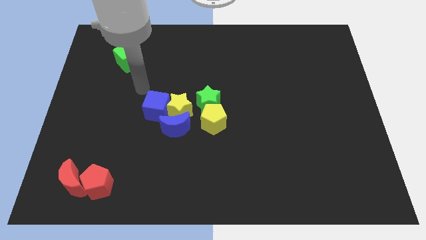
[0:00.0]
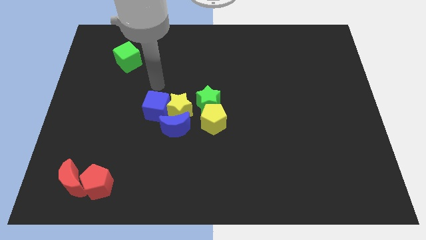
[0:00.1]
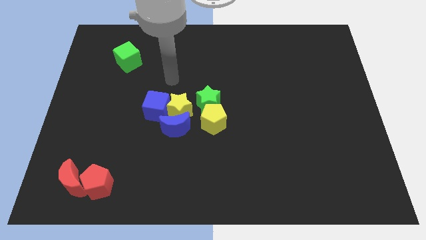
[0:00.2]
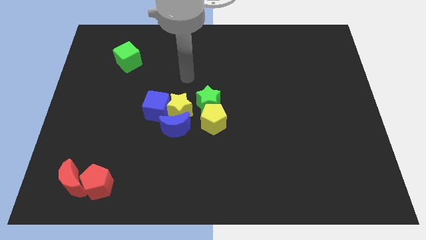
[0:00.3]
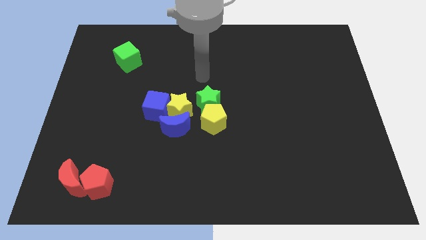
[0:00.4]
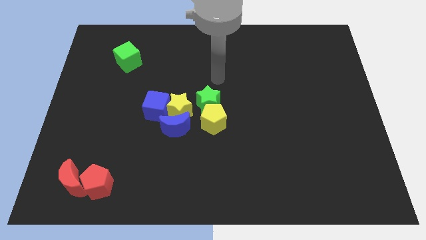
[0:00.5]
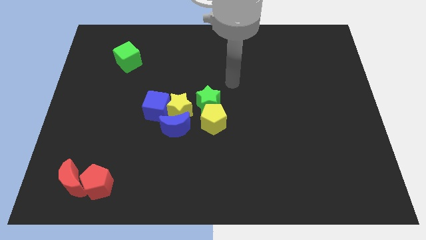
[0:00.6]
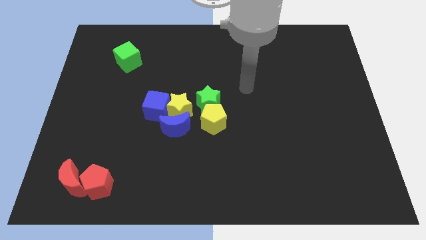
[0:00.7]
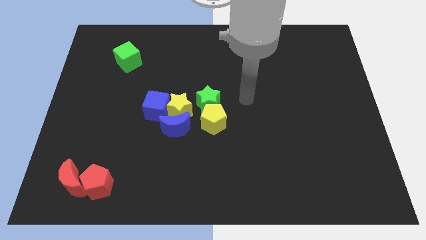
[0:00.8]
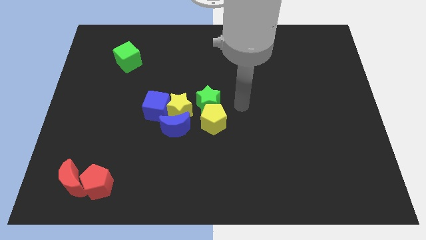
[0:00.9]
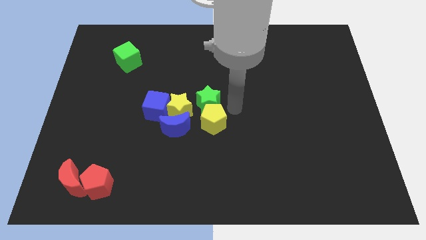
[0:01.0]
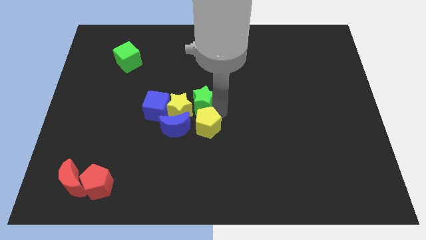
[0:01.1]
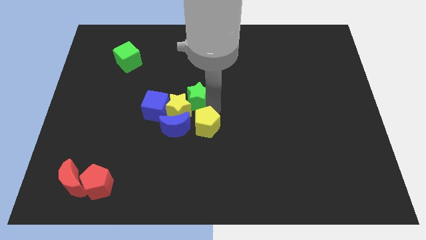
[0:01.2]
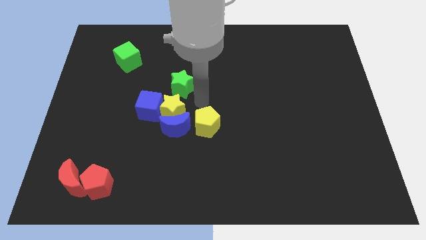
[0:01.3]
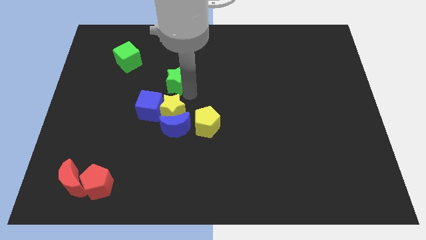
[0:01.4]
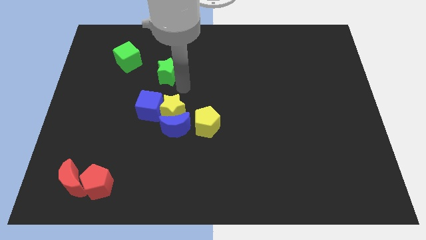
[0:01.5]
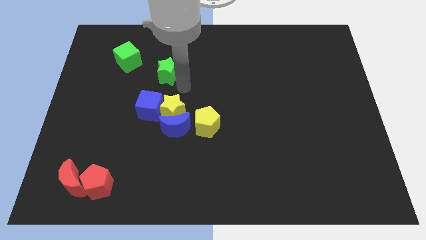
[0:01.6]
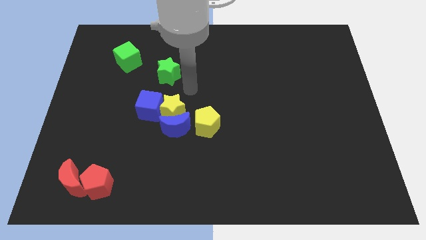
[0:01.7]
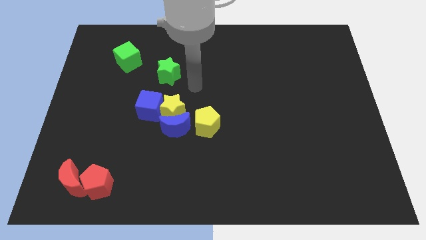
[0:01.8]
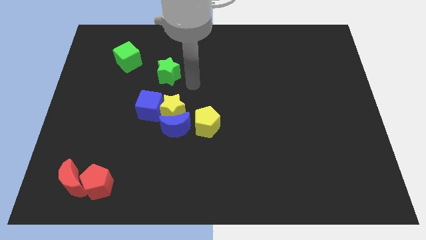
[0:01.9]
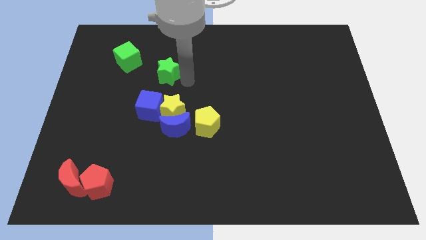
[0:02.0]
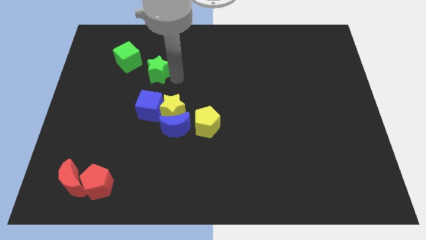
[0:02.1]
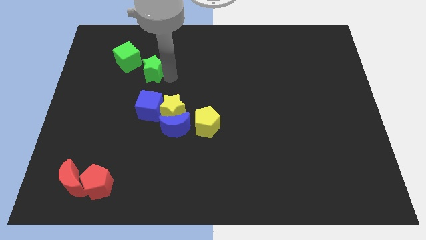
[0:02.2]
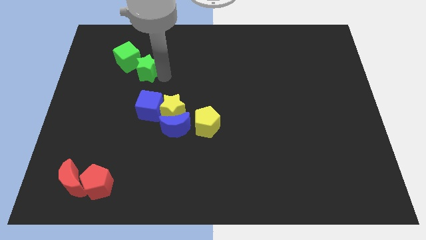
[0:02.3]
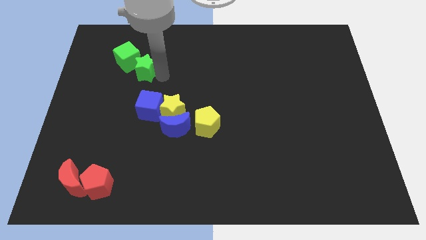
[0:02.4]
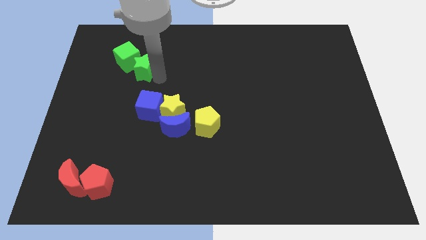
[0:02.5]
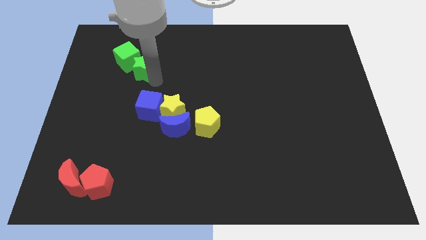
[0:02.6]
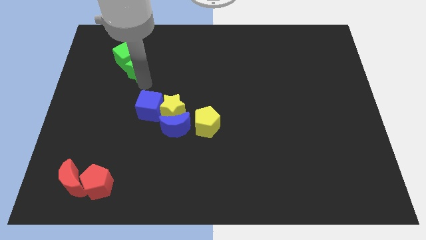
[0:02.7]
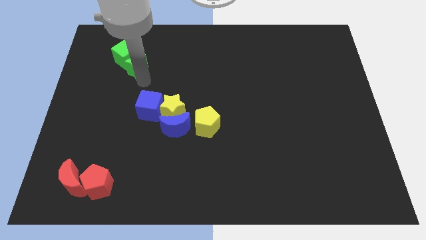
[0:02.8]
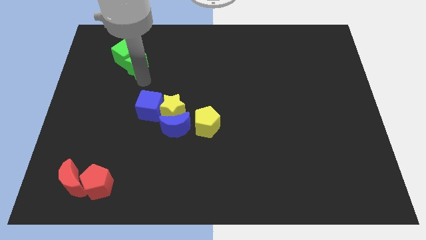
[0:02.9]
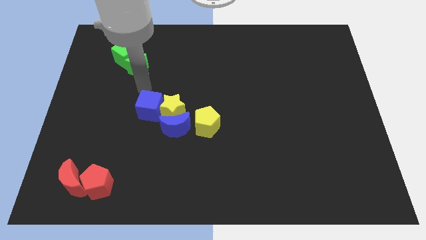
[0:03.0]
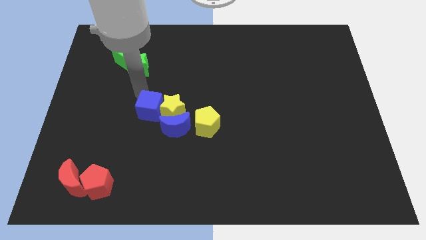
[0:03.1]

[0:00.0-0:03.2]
move green star into the green cube

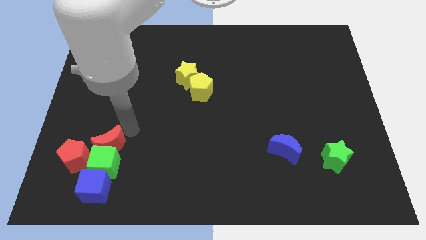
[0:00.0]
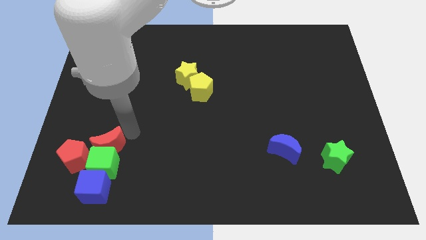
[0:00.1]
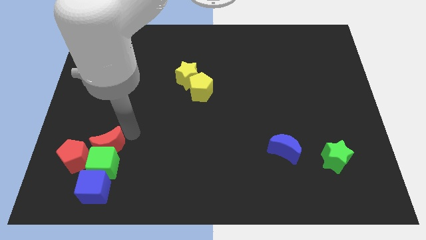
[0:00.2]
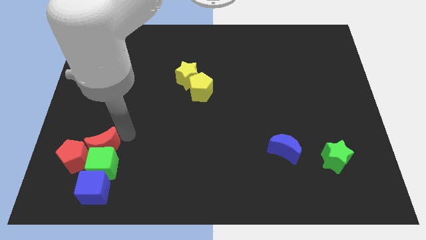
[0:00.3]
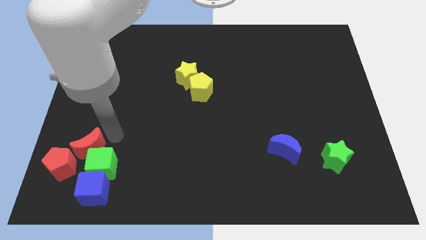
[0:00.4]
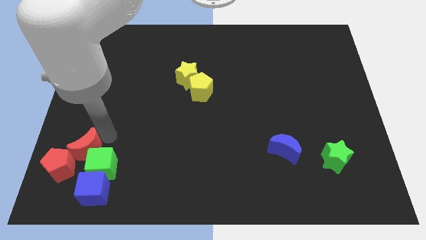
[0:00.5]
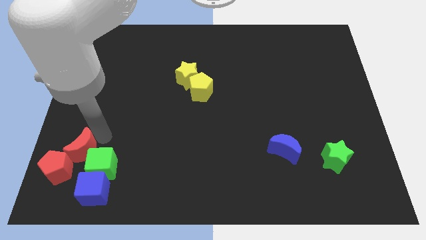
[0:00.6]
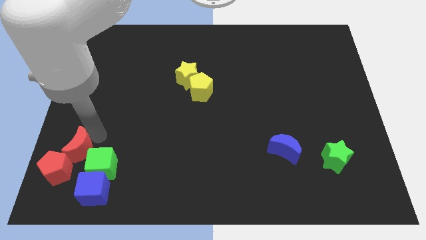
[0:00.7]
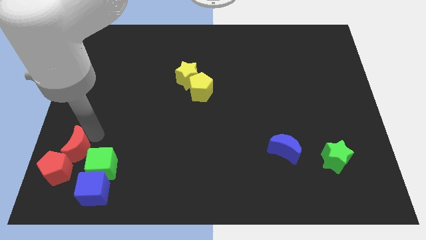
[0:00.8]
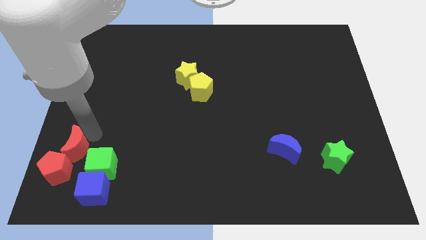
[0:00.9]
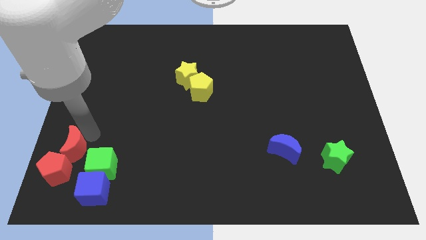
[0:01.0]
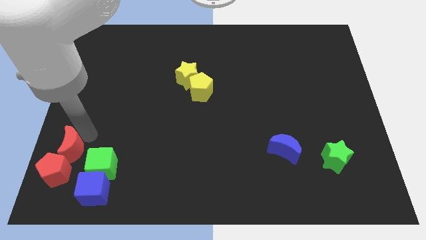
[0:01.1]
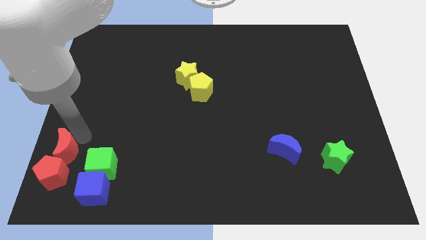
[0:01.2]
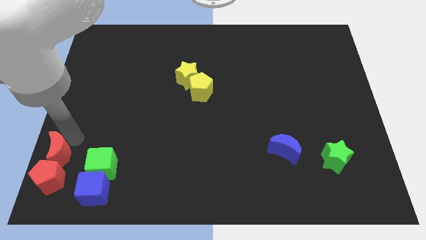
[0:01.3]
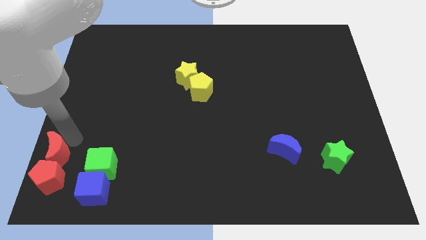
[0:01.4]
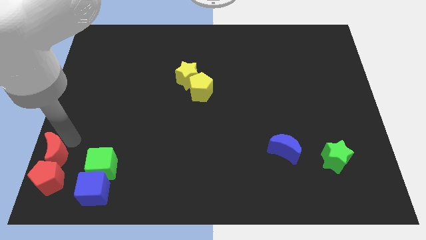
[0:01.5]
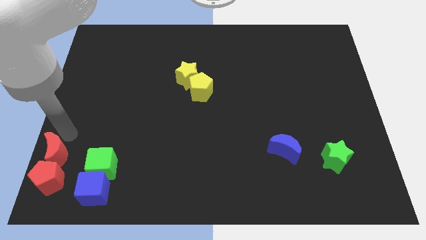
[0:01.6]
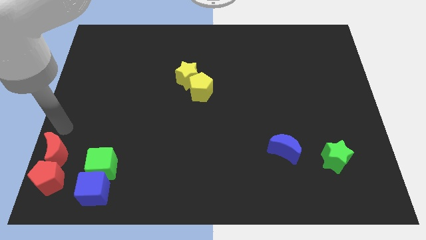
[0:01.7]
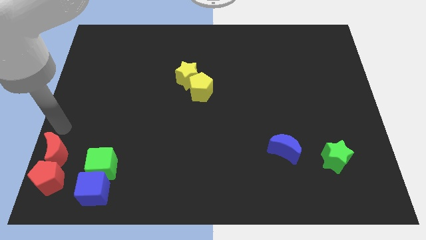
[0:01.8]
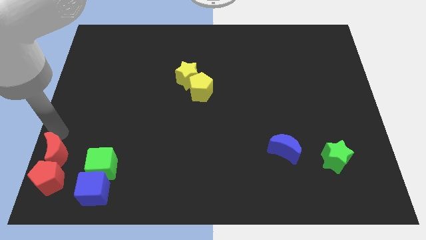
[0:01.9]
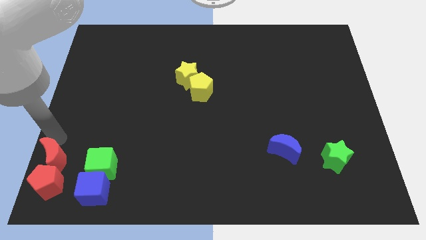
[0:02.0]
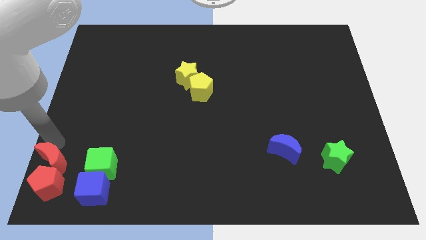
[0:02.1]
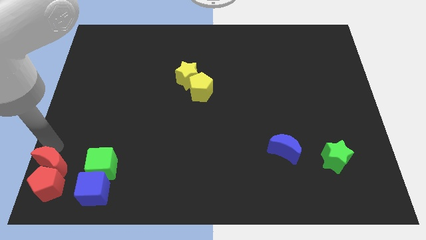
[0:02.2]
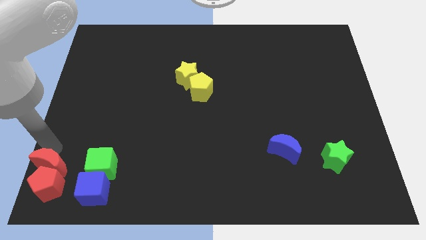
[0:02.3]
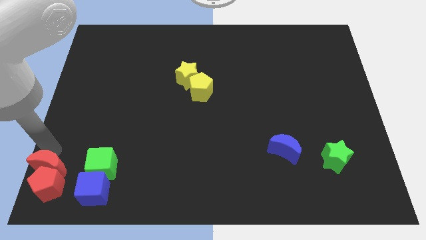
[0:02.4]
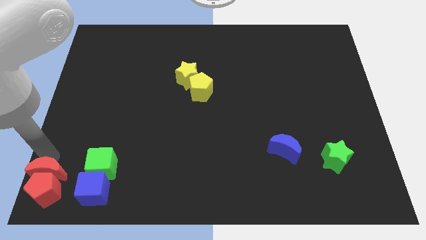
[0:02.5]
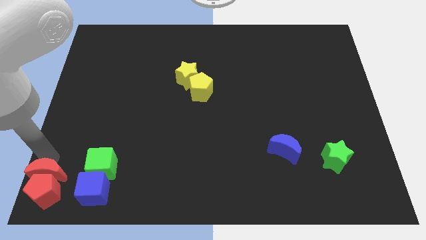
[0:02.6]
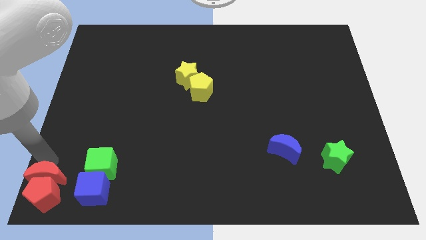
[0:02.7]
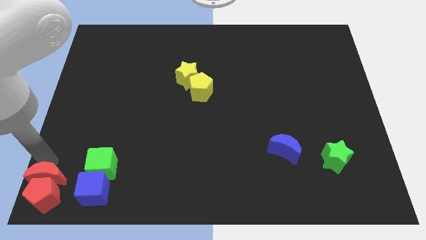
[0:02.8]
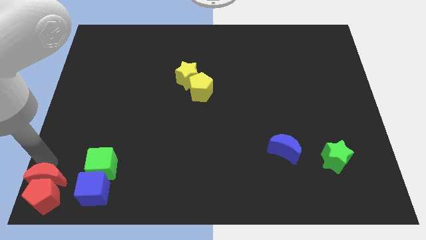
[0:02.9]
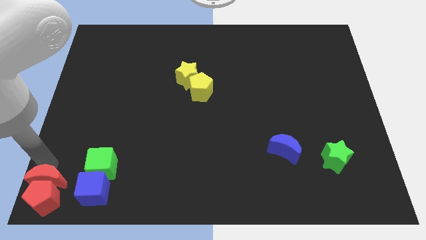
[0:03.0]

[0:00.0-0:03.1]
push the red moon at the bottom left of the board

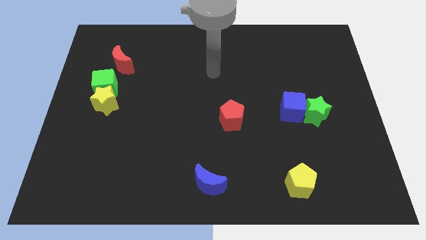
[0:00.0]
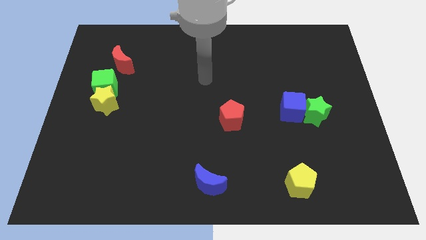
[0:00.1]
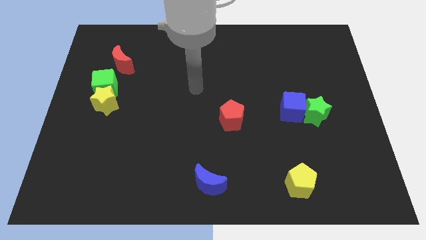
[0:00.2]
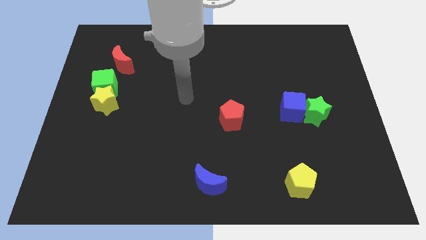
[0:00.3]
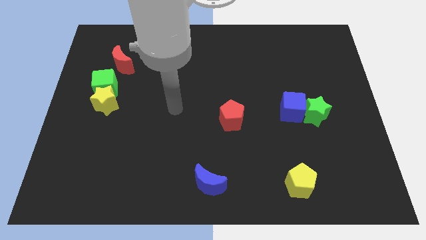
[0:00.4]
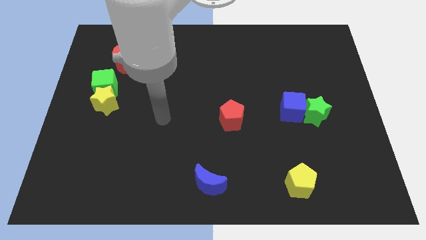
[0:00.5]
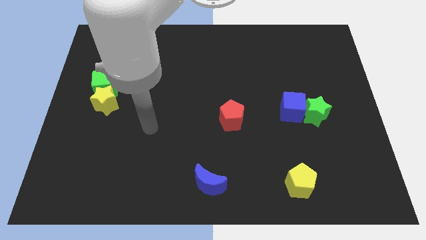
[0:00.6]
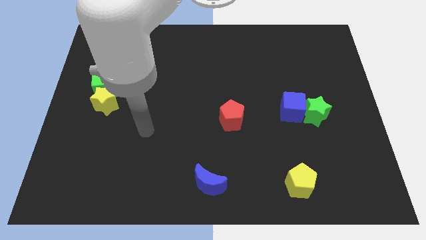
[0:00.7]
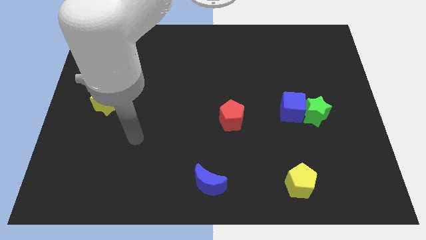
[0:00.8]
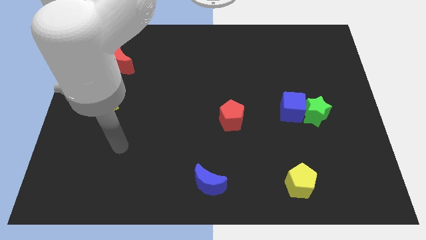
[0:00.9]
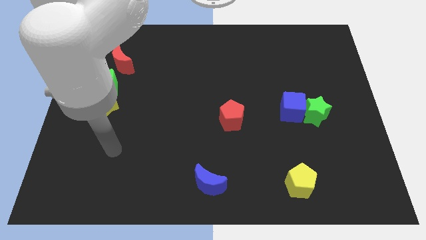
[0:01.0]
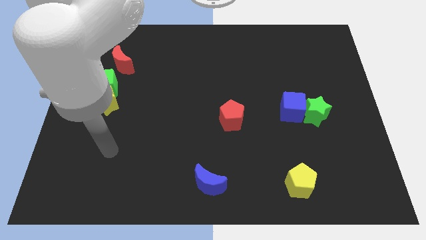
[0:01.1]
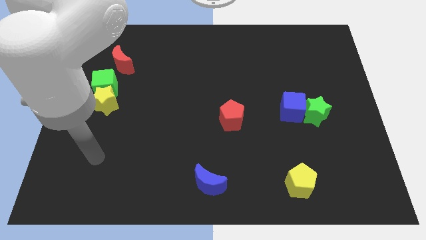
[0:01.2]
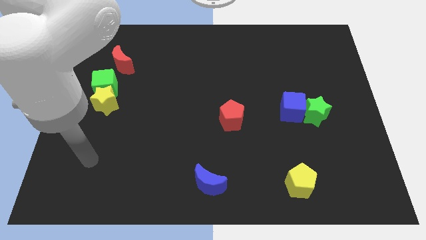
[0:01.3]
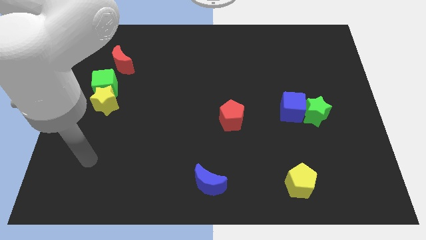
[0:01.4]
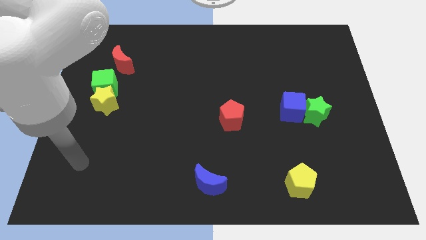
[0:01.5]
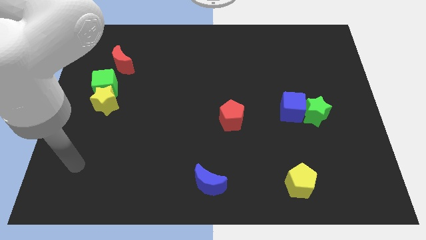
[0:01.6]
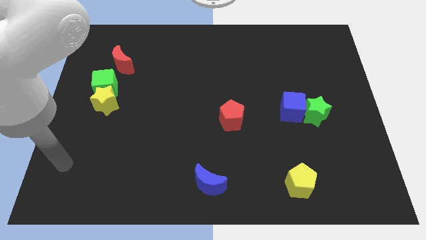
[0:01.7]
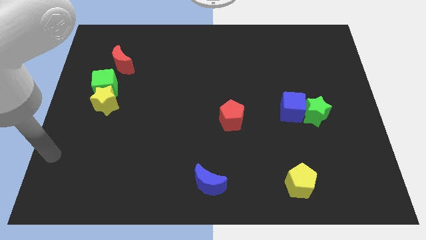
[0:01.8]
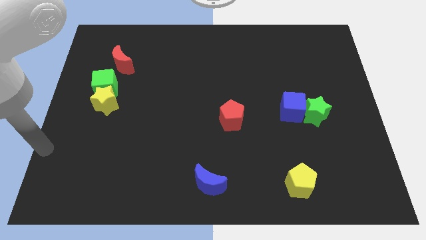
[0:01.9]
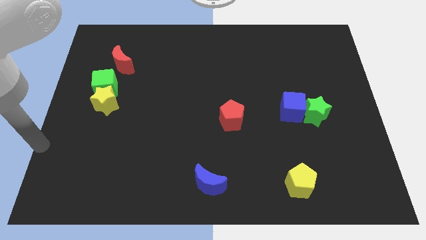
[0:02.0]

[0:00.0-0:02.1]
place your arm diagonally bottom left to the yellow star

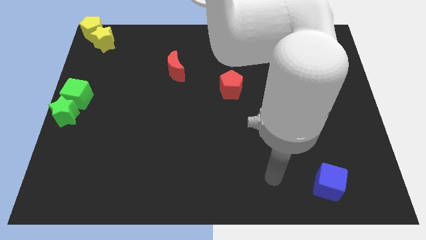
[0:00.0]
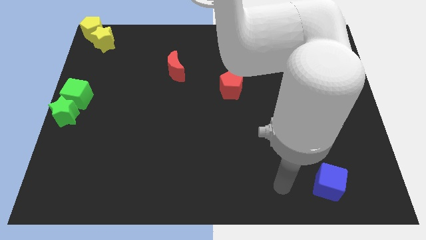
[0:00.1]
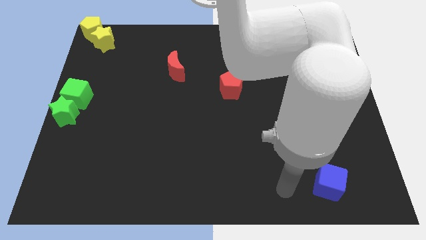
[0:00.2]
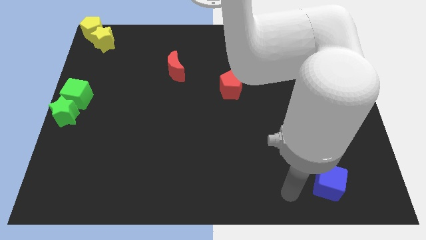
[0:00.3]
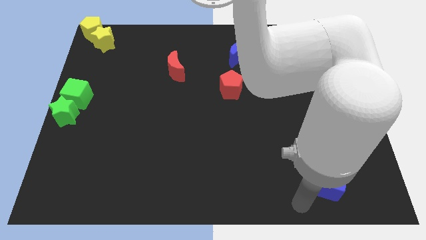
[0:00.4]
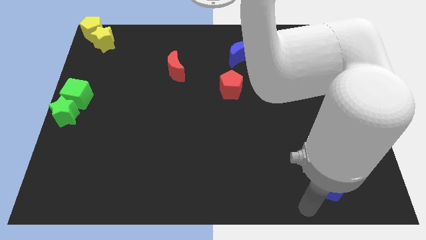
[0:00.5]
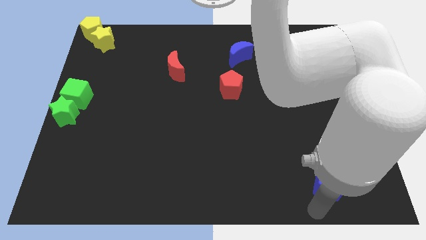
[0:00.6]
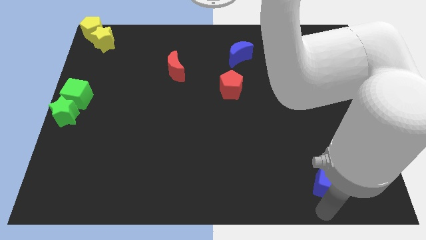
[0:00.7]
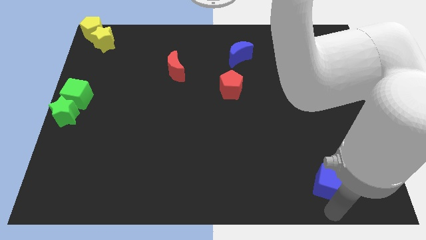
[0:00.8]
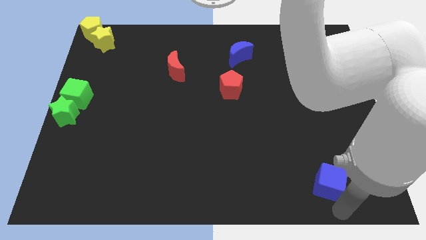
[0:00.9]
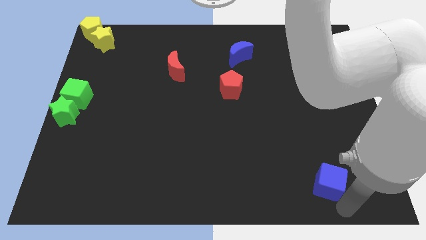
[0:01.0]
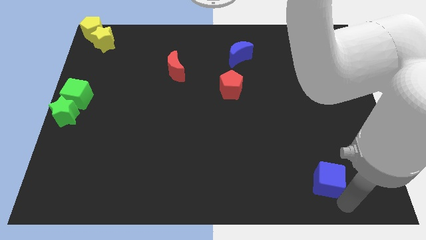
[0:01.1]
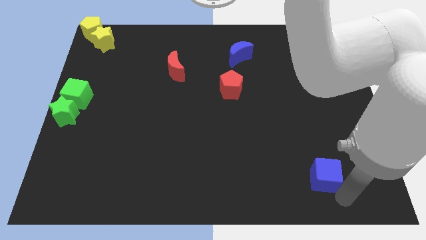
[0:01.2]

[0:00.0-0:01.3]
touch the blue cube
